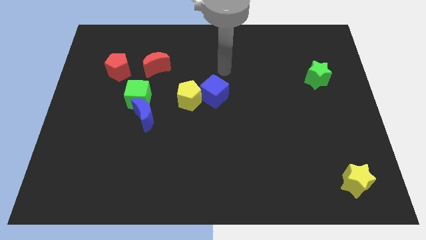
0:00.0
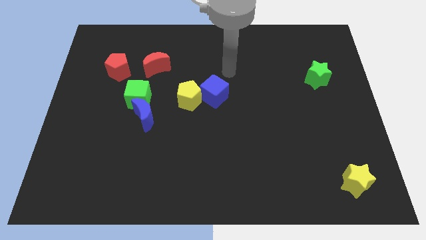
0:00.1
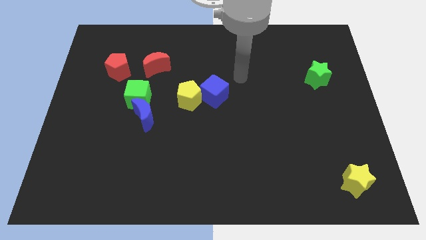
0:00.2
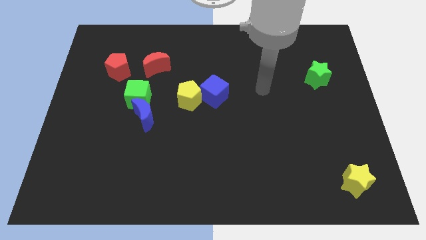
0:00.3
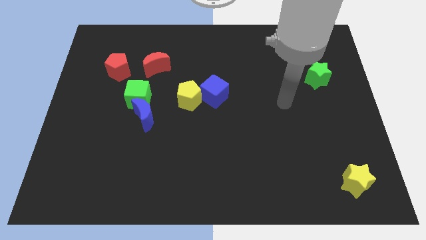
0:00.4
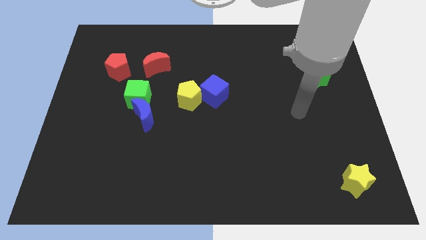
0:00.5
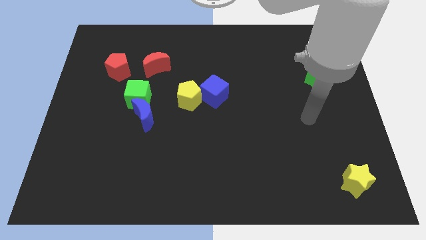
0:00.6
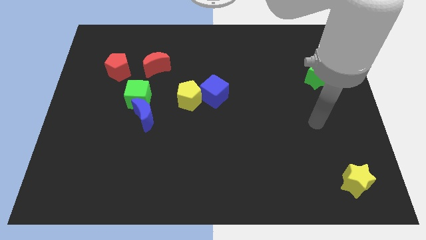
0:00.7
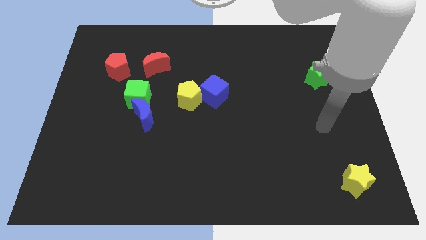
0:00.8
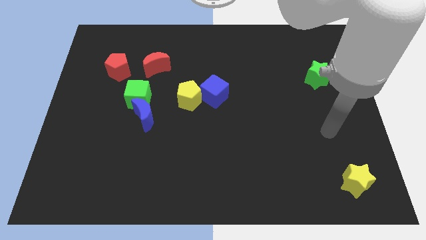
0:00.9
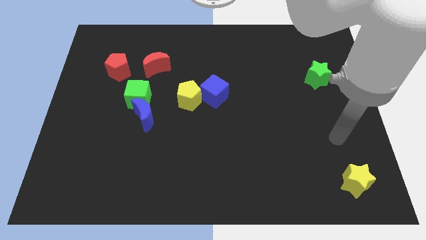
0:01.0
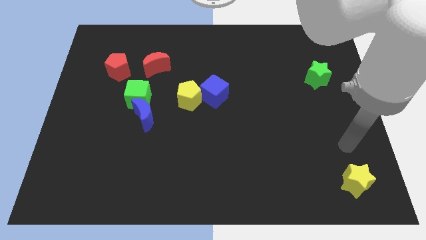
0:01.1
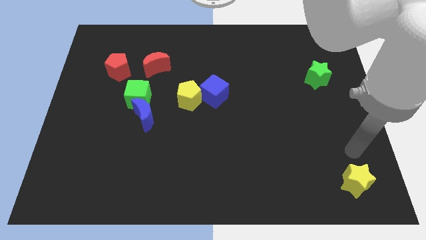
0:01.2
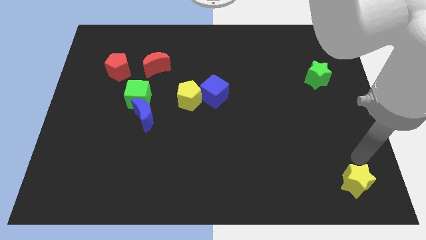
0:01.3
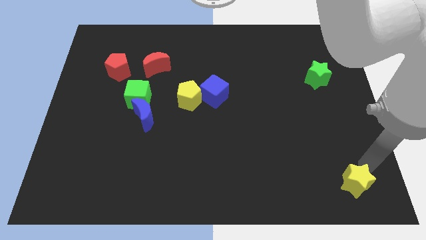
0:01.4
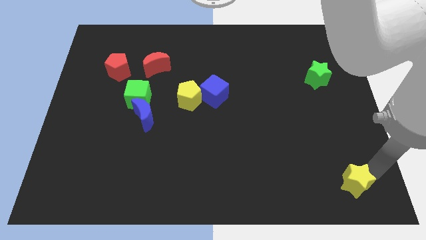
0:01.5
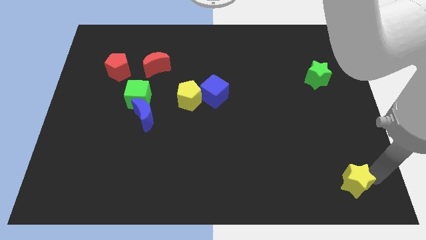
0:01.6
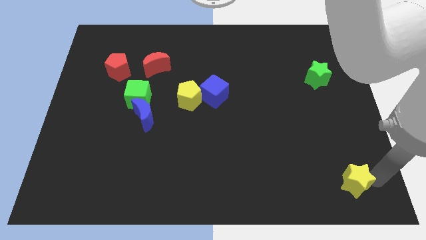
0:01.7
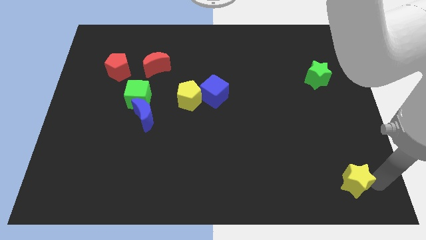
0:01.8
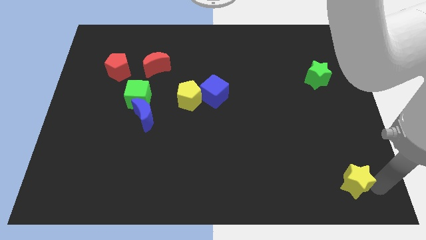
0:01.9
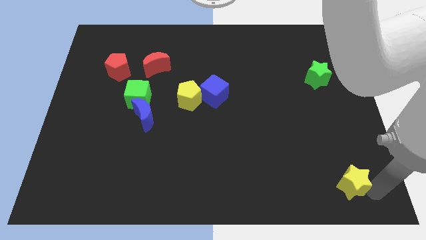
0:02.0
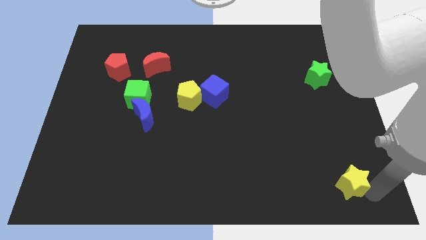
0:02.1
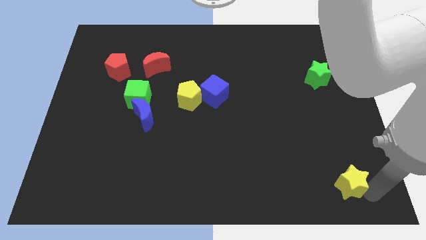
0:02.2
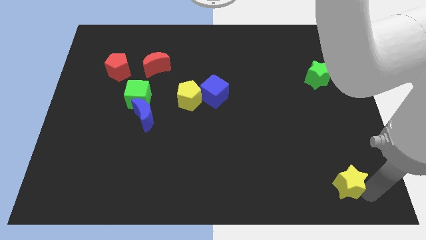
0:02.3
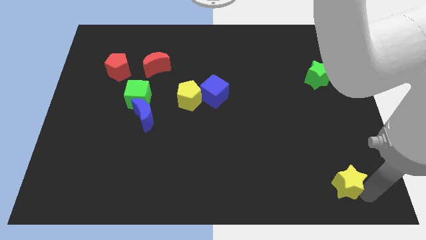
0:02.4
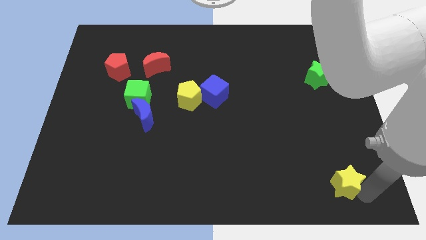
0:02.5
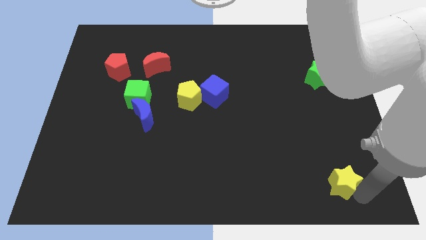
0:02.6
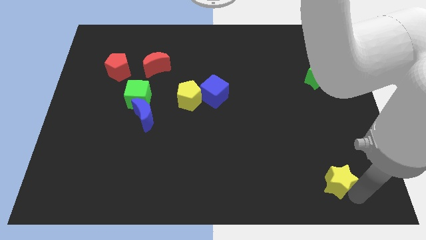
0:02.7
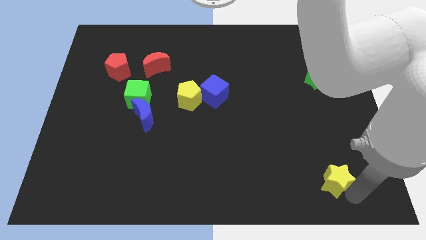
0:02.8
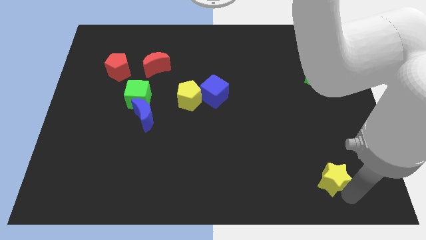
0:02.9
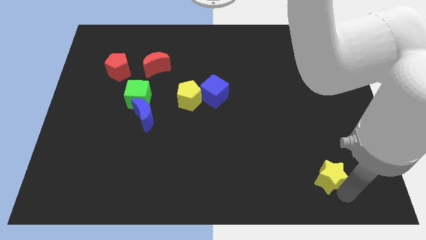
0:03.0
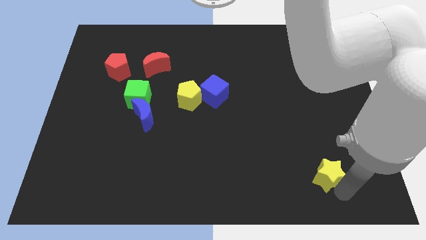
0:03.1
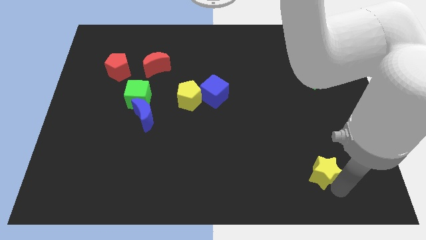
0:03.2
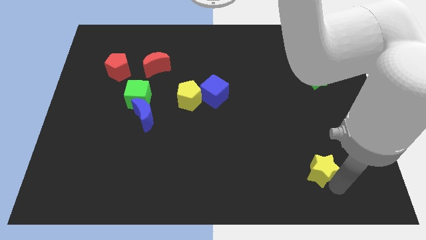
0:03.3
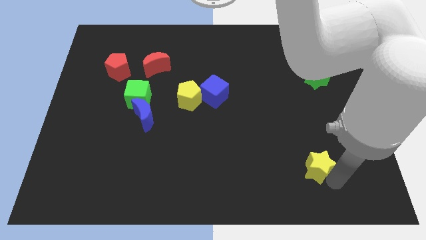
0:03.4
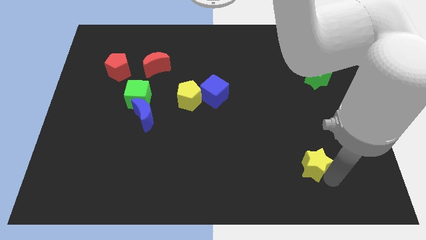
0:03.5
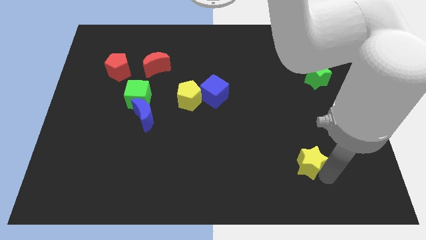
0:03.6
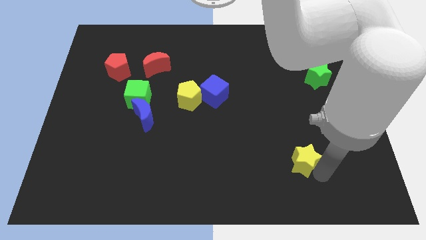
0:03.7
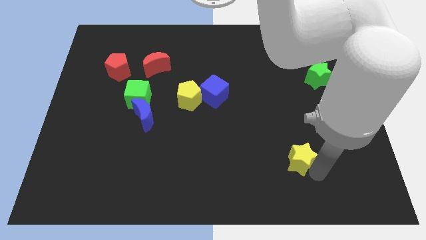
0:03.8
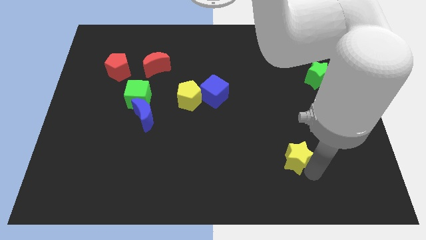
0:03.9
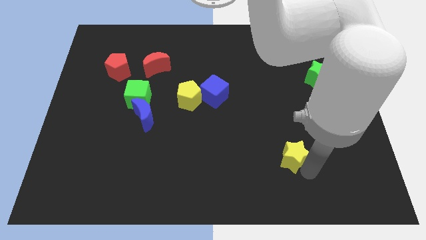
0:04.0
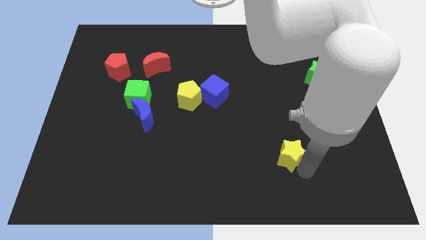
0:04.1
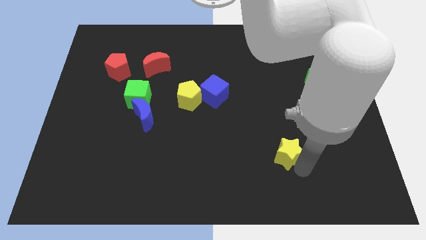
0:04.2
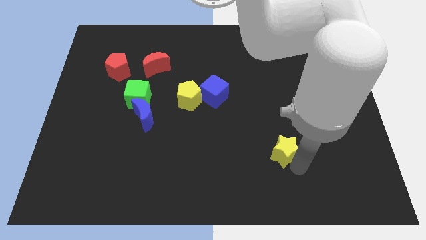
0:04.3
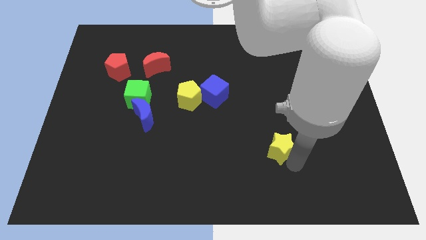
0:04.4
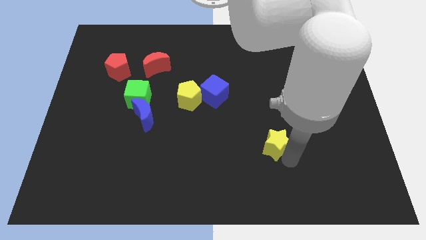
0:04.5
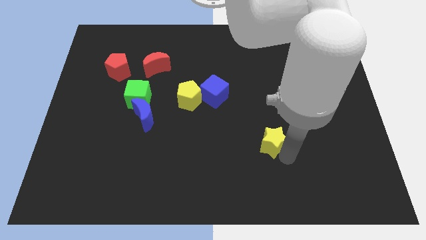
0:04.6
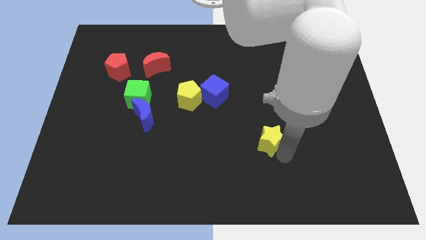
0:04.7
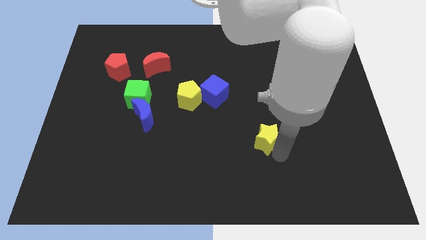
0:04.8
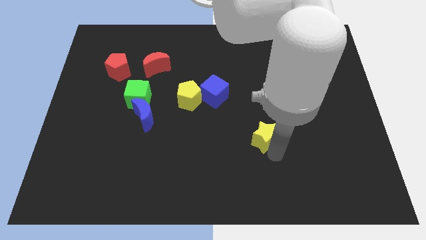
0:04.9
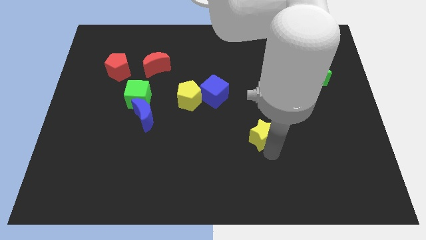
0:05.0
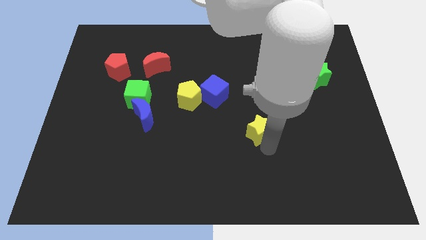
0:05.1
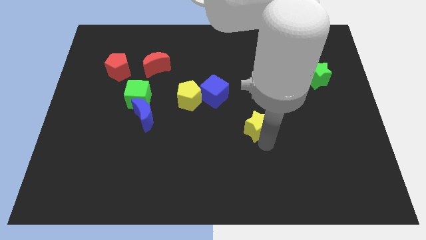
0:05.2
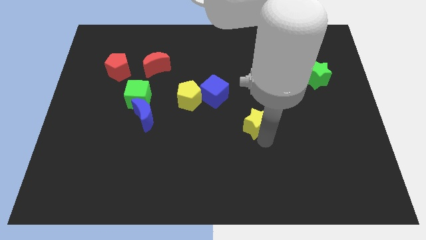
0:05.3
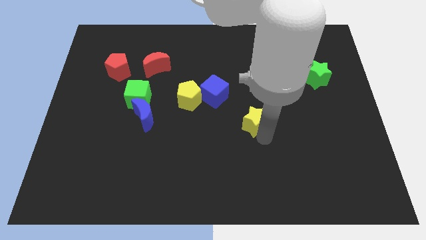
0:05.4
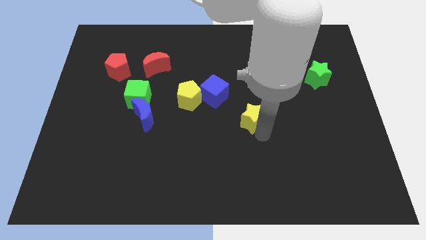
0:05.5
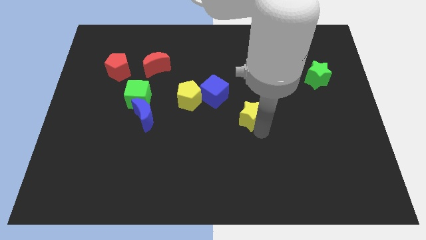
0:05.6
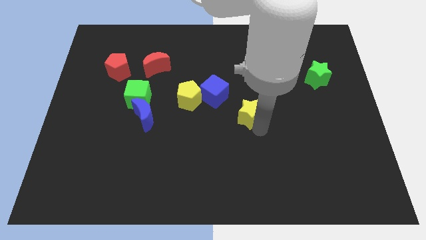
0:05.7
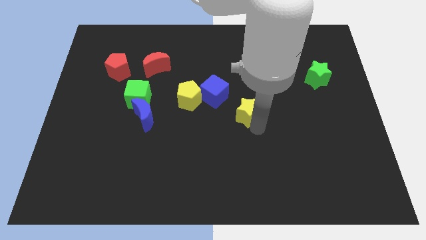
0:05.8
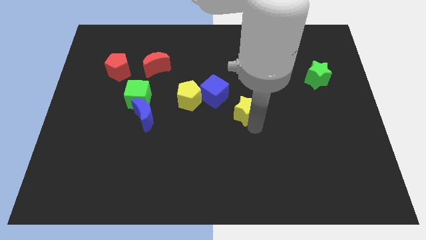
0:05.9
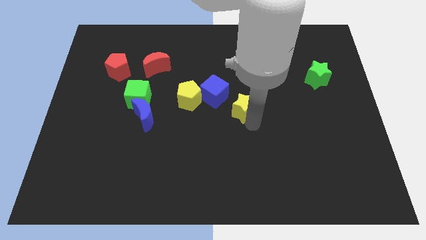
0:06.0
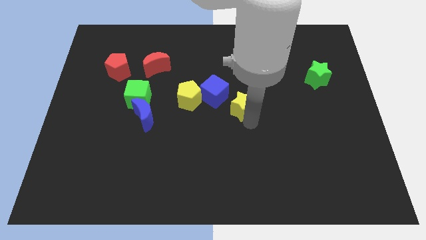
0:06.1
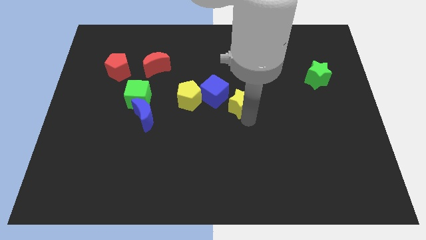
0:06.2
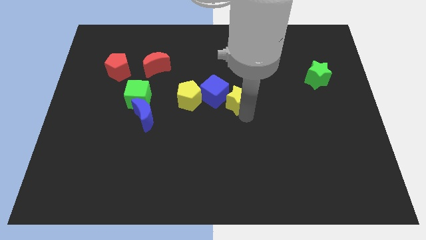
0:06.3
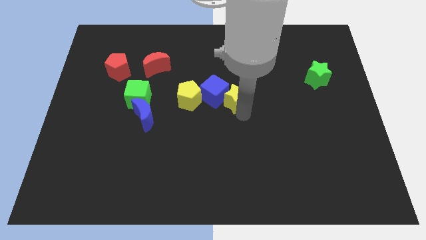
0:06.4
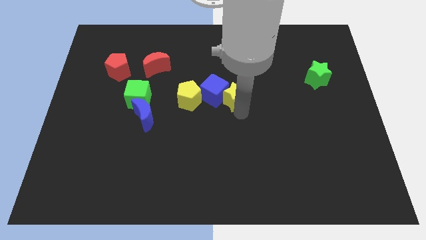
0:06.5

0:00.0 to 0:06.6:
move the yellow star to the blue cube

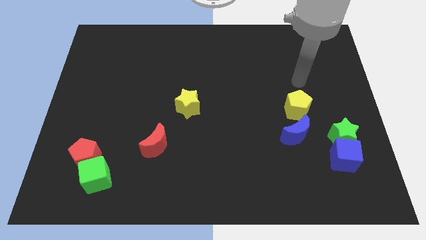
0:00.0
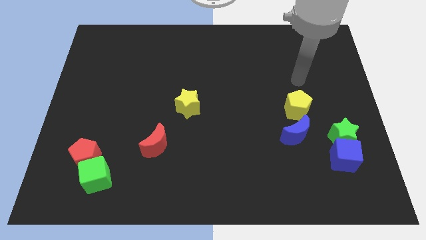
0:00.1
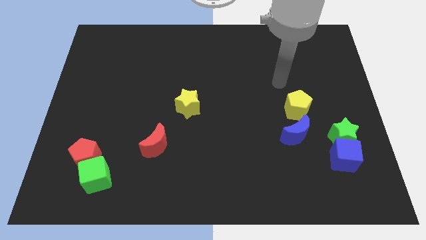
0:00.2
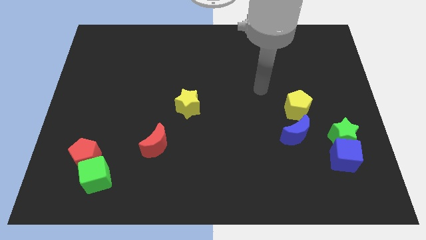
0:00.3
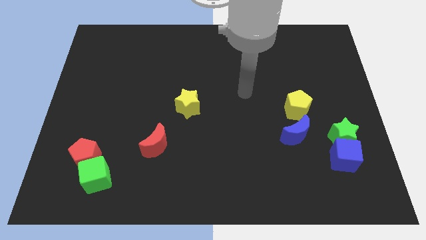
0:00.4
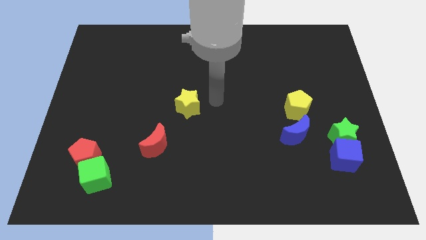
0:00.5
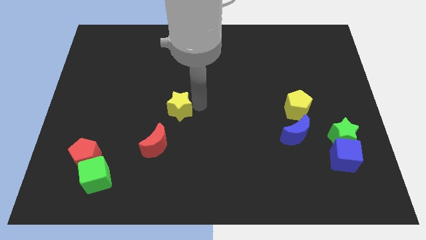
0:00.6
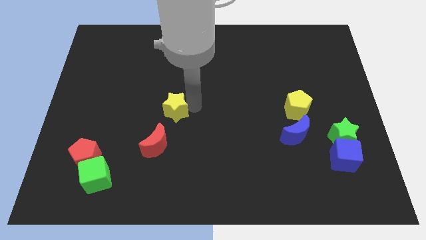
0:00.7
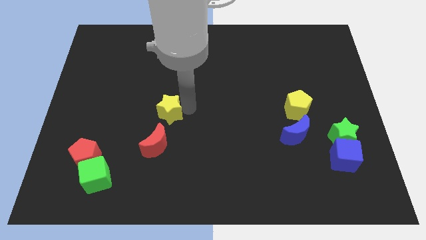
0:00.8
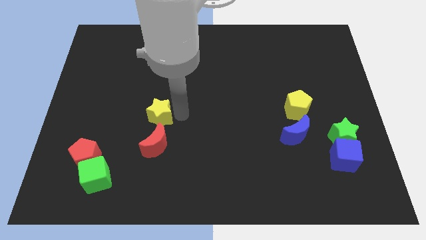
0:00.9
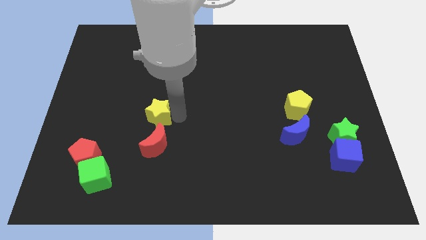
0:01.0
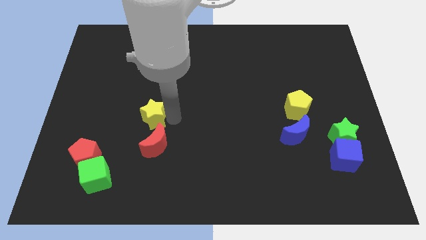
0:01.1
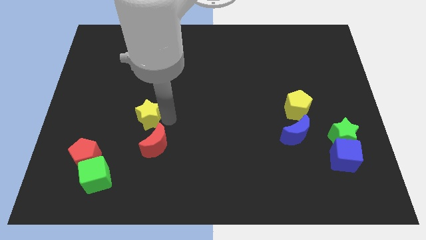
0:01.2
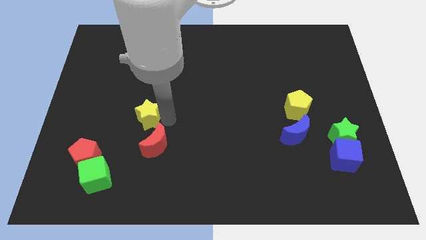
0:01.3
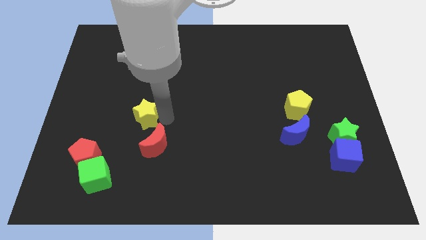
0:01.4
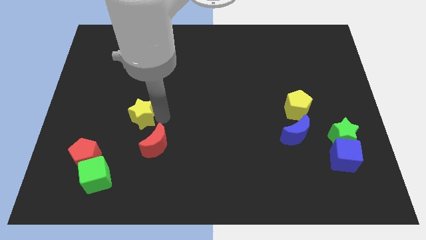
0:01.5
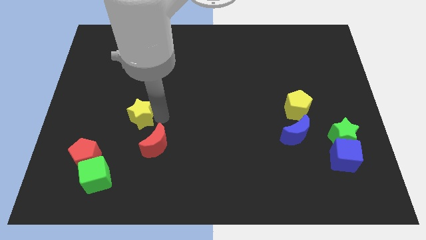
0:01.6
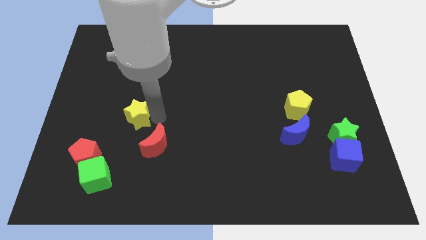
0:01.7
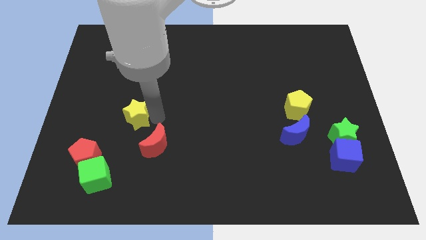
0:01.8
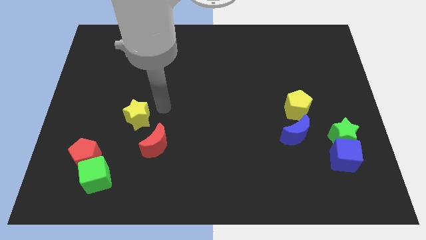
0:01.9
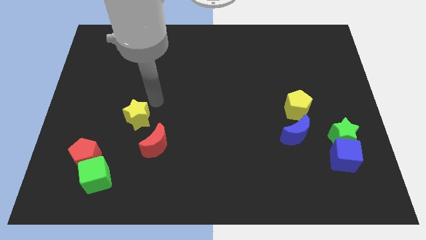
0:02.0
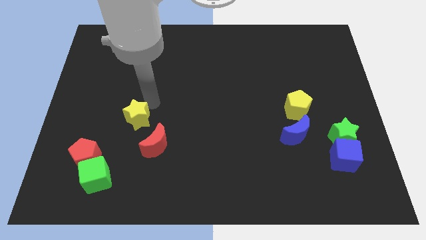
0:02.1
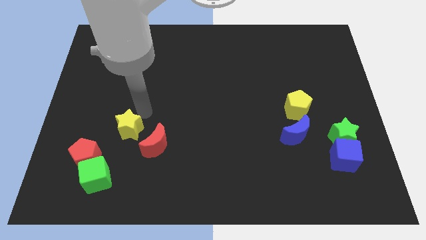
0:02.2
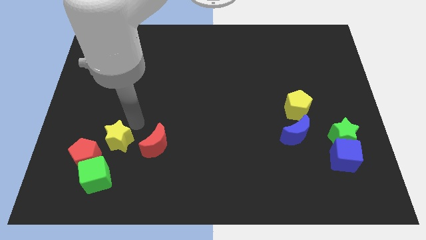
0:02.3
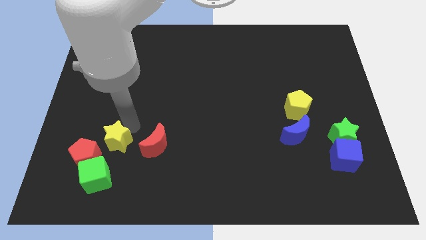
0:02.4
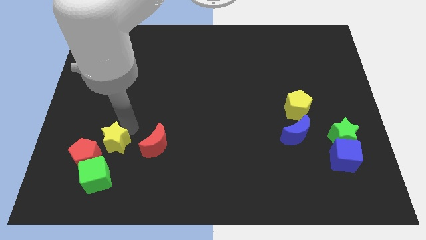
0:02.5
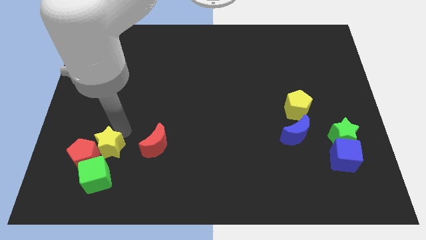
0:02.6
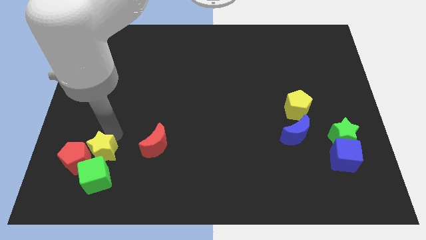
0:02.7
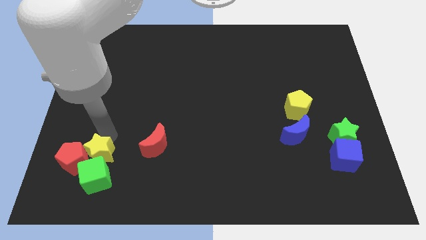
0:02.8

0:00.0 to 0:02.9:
put the yellow star towards the red pentagon
